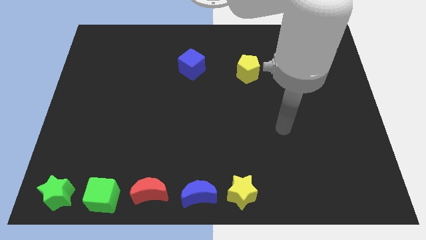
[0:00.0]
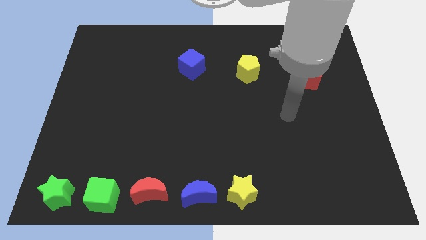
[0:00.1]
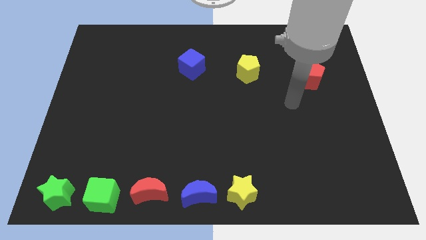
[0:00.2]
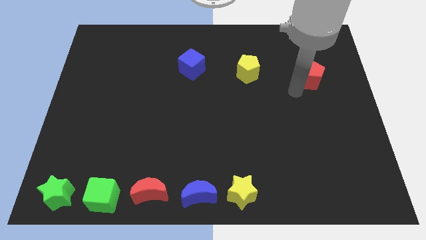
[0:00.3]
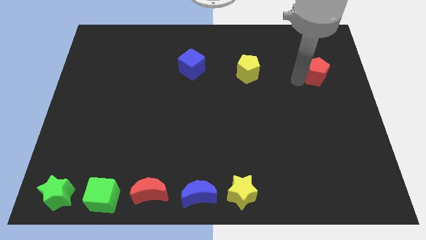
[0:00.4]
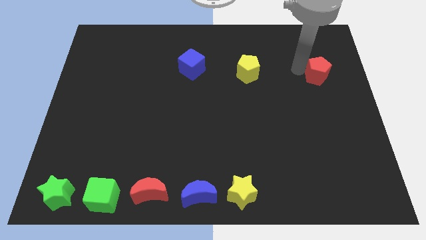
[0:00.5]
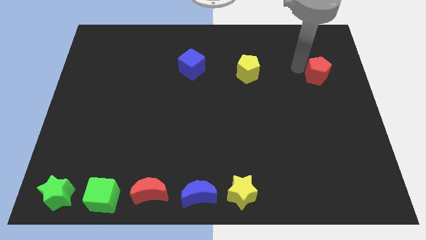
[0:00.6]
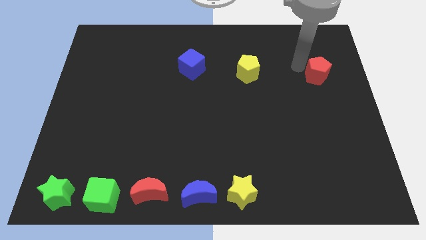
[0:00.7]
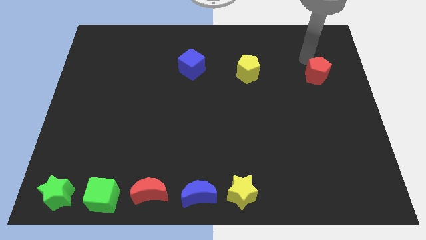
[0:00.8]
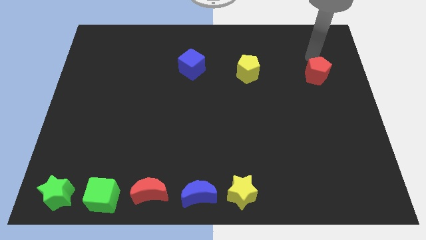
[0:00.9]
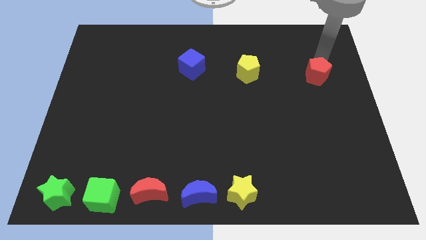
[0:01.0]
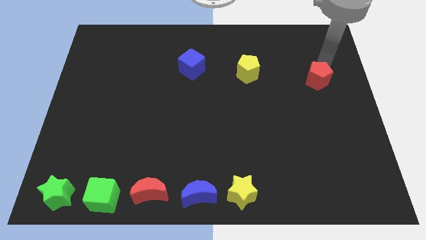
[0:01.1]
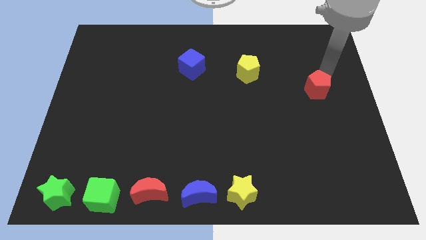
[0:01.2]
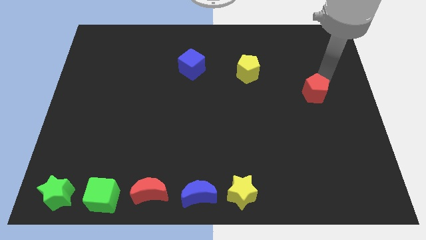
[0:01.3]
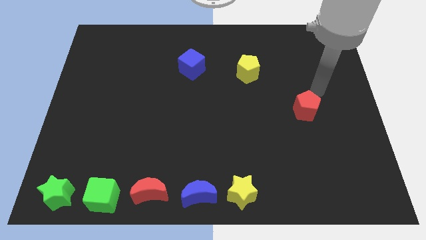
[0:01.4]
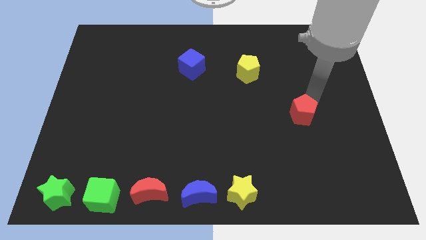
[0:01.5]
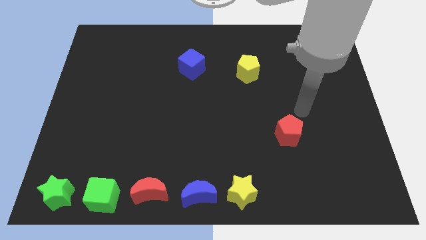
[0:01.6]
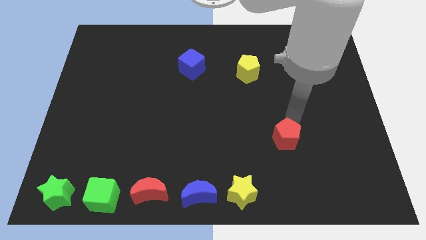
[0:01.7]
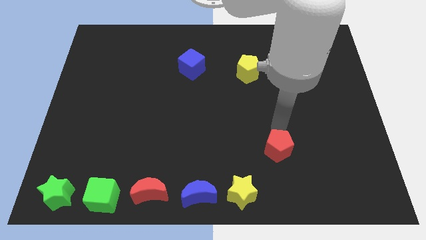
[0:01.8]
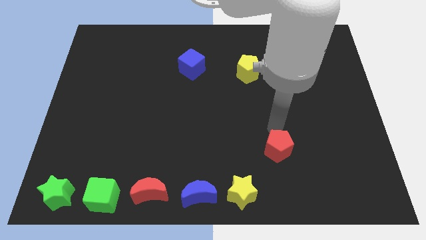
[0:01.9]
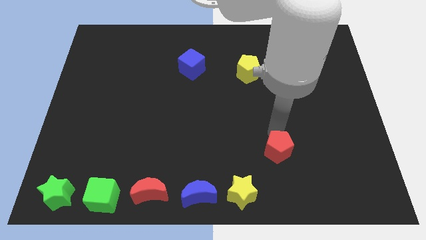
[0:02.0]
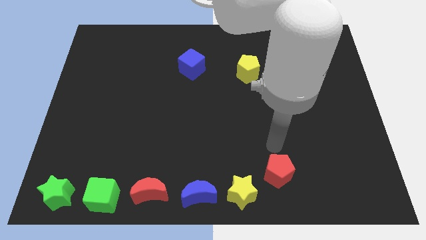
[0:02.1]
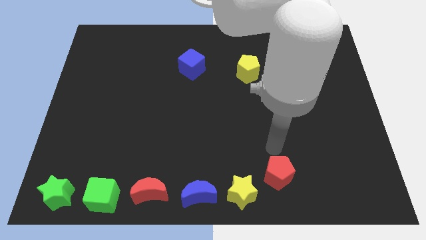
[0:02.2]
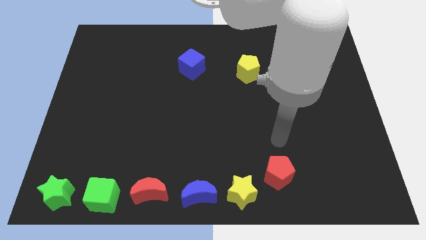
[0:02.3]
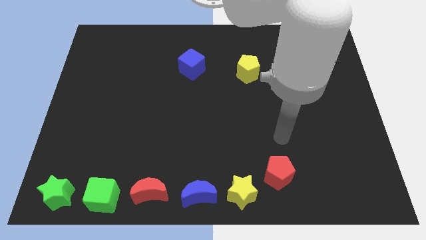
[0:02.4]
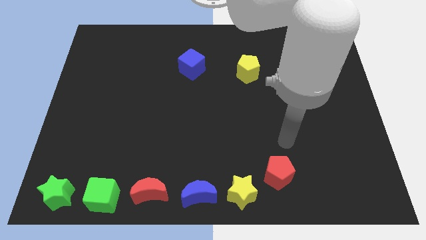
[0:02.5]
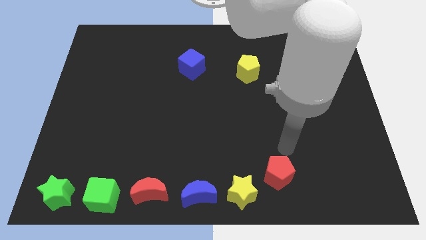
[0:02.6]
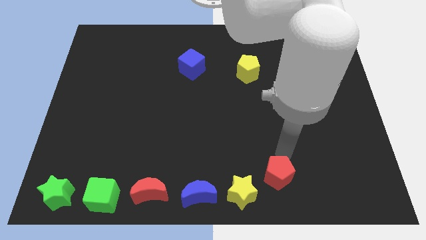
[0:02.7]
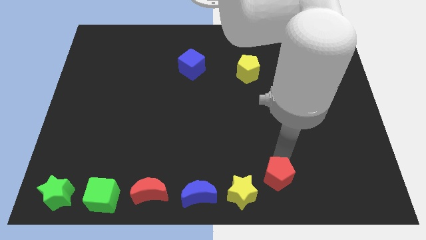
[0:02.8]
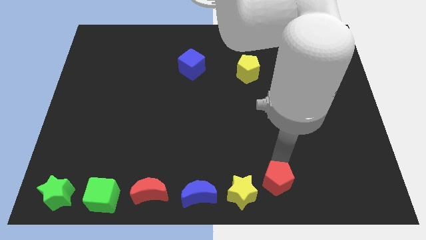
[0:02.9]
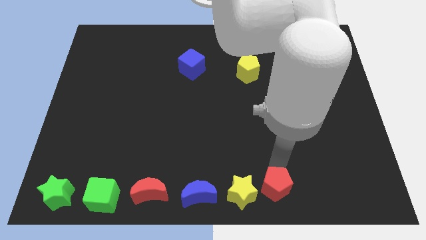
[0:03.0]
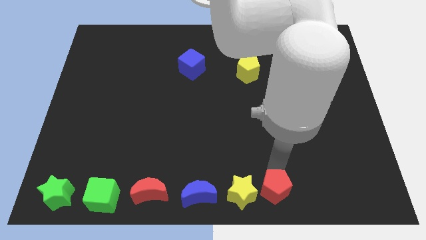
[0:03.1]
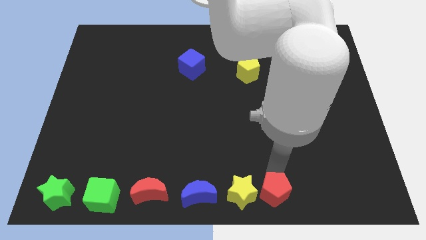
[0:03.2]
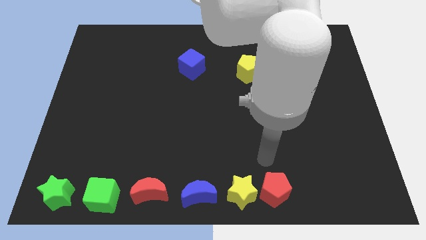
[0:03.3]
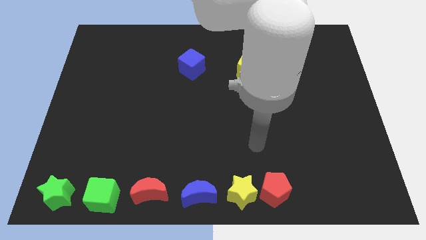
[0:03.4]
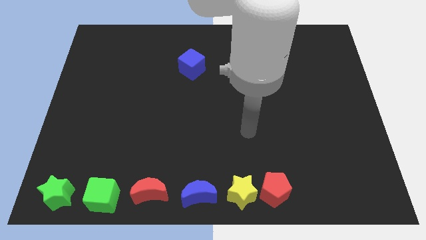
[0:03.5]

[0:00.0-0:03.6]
push the red pentagon close to the right of the yellow star

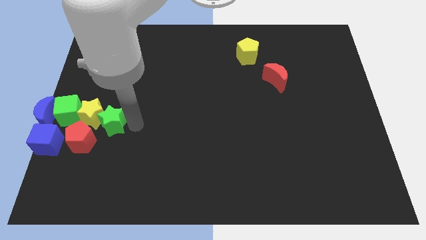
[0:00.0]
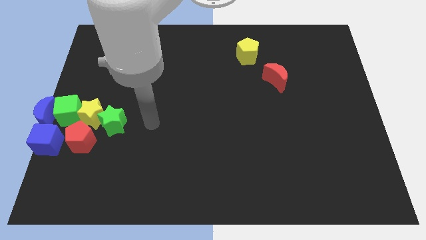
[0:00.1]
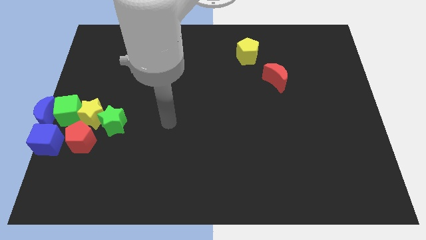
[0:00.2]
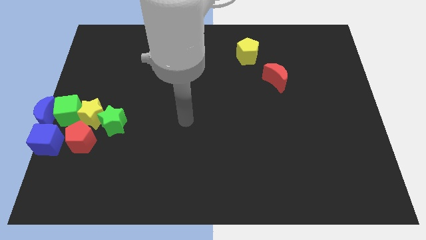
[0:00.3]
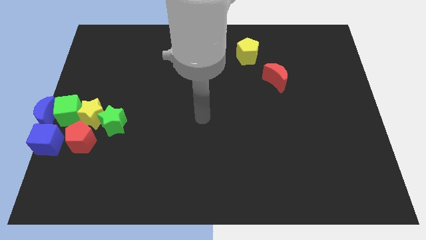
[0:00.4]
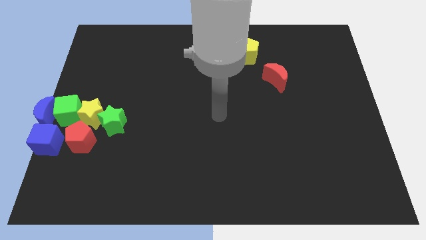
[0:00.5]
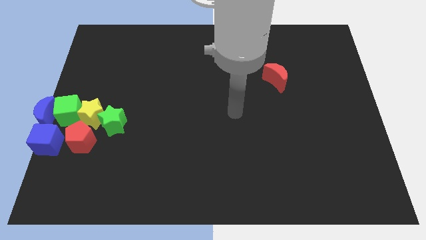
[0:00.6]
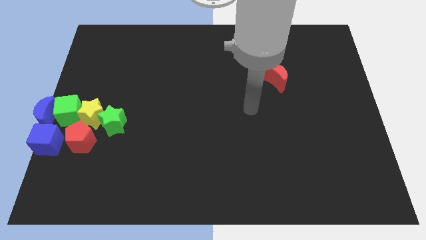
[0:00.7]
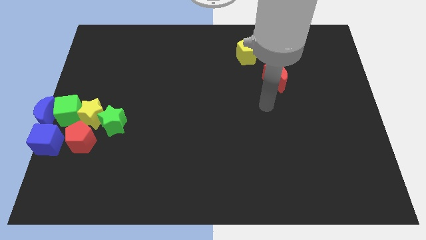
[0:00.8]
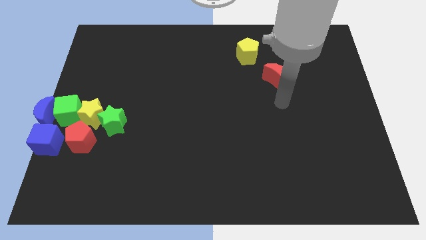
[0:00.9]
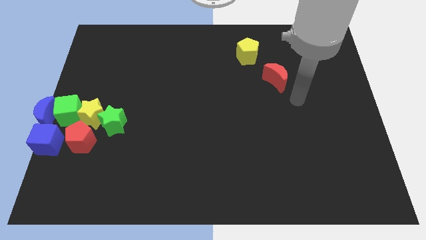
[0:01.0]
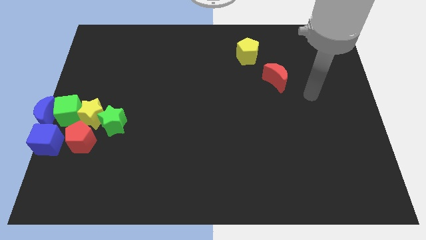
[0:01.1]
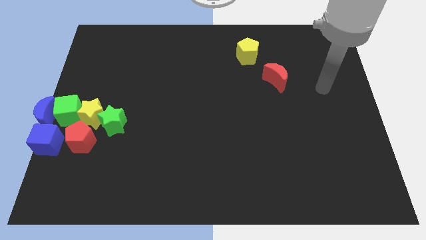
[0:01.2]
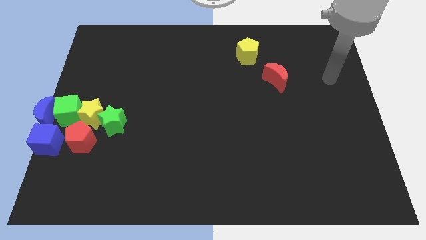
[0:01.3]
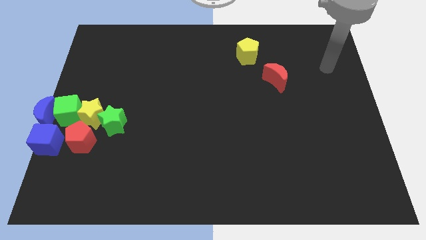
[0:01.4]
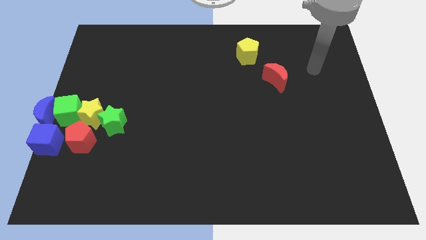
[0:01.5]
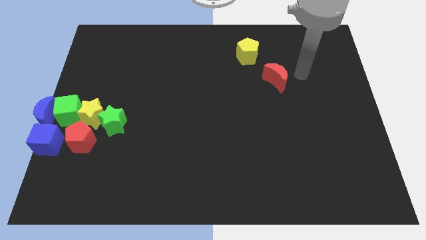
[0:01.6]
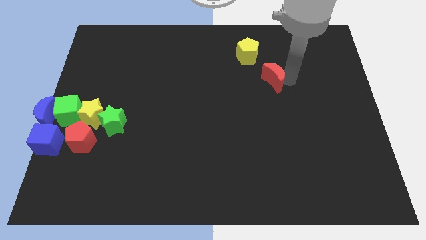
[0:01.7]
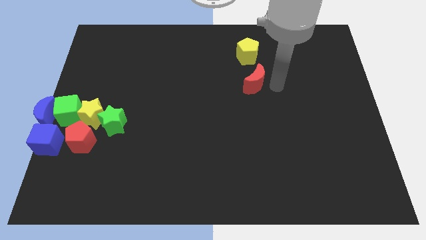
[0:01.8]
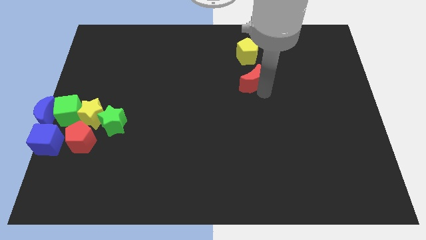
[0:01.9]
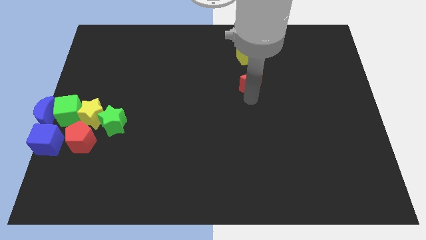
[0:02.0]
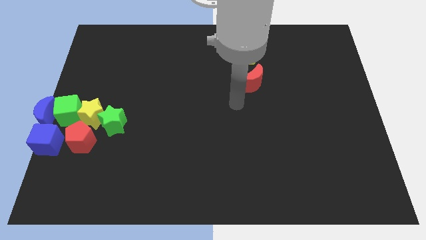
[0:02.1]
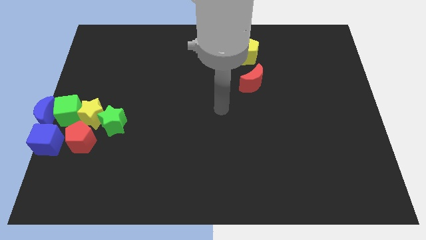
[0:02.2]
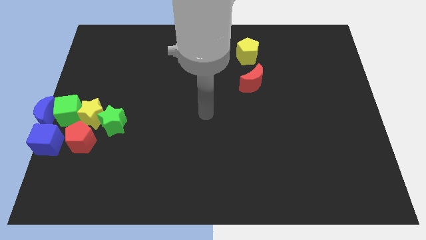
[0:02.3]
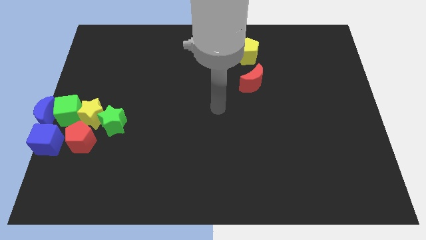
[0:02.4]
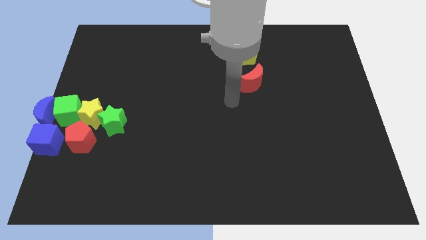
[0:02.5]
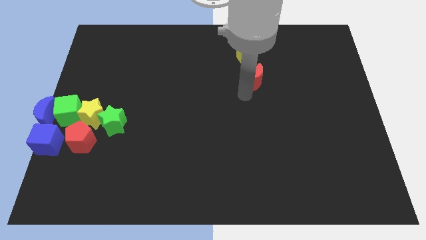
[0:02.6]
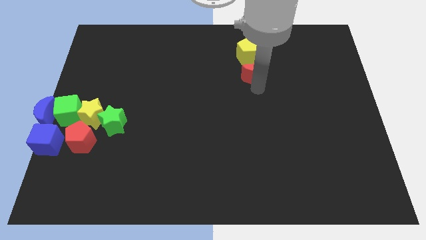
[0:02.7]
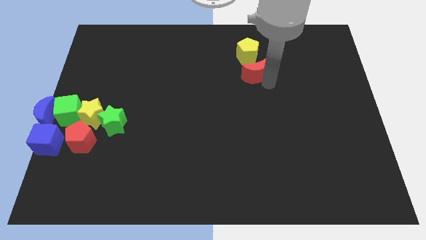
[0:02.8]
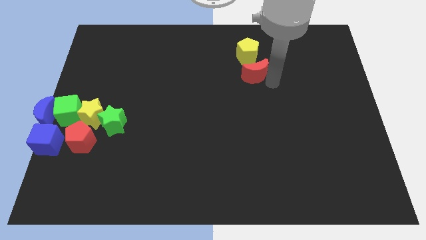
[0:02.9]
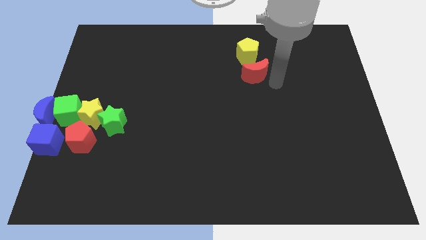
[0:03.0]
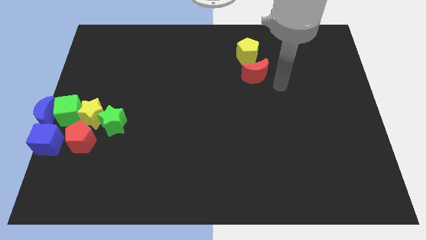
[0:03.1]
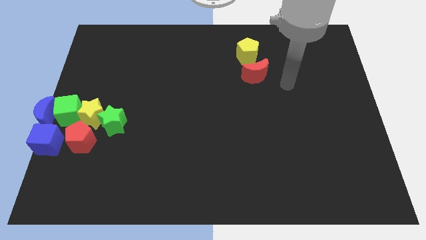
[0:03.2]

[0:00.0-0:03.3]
move the red moon down to the yellow pentagon

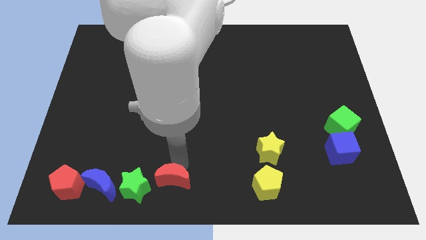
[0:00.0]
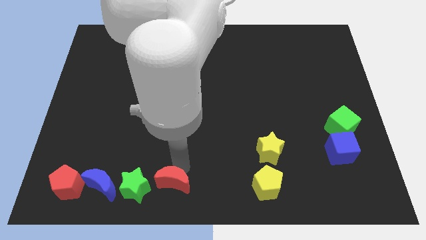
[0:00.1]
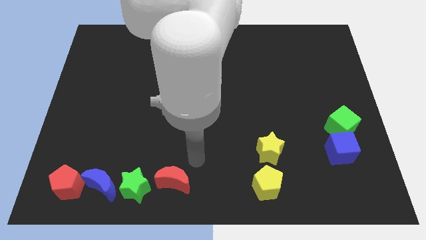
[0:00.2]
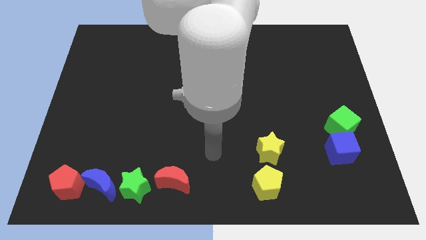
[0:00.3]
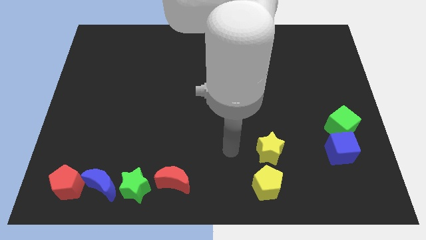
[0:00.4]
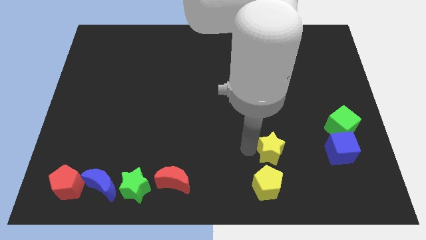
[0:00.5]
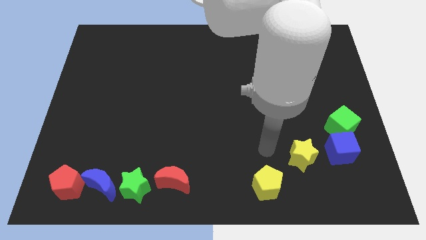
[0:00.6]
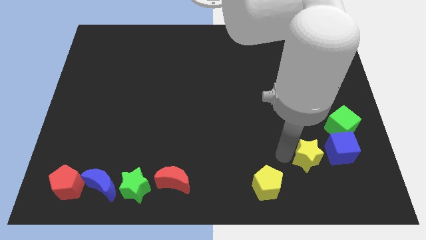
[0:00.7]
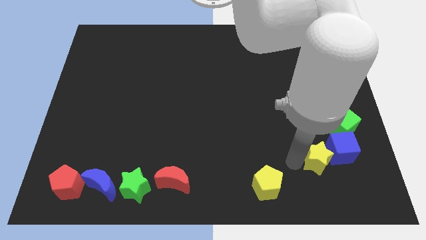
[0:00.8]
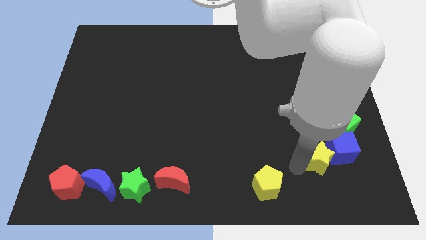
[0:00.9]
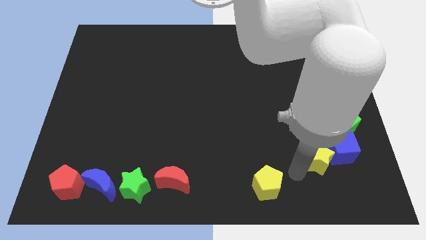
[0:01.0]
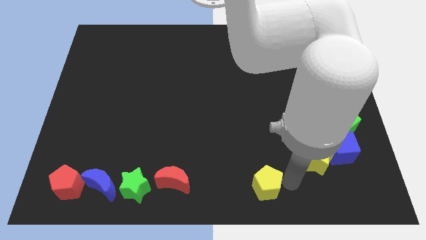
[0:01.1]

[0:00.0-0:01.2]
push the yellow star into the blue cube

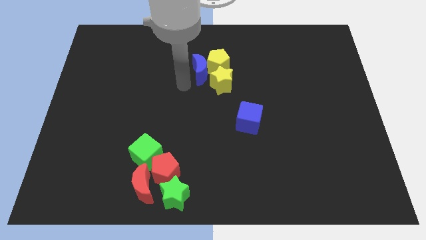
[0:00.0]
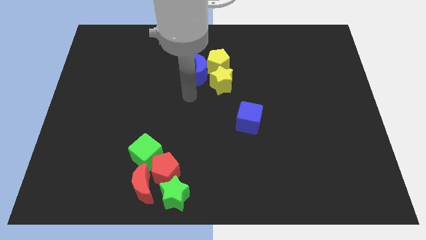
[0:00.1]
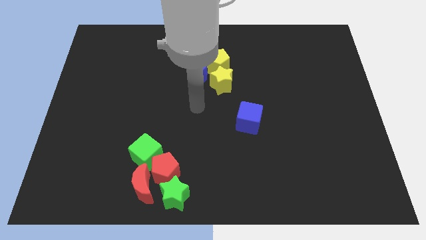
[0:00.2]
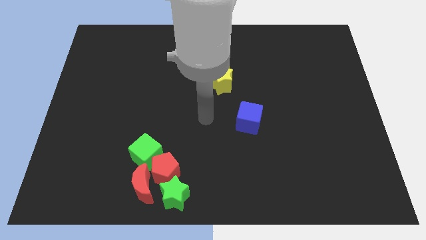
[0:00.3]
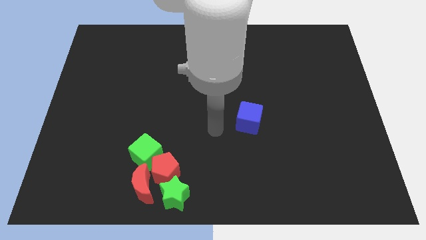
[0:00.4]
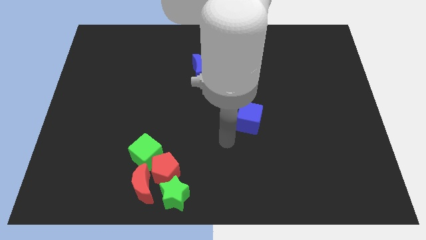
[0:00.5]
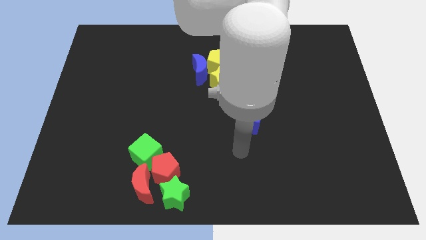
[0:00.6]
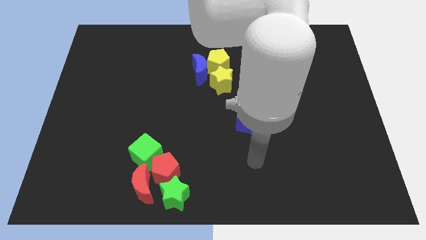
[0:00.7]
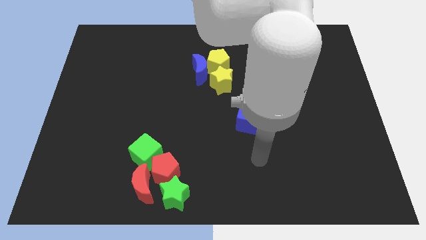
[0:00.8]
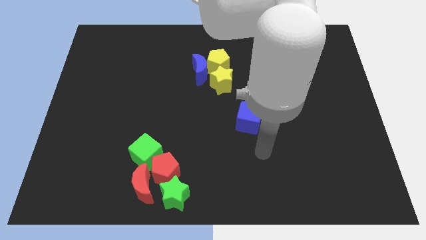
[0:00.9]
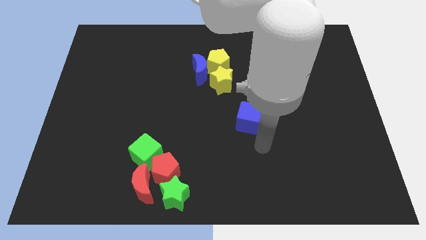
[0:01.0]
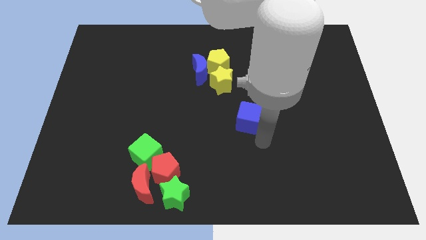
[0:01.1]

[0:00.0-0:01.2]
move your arm towards the blue cube
